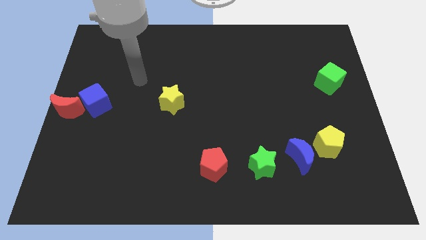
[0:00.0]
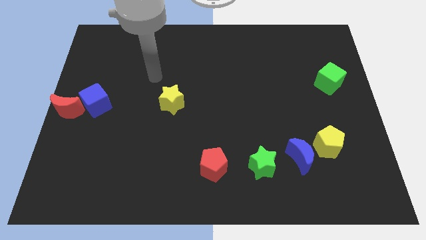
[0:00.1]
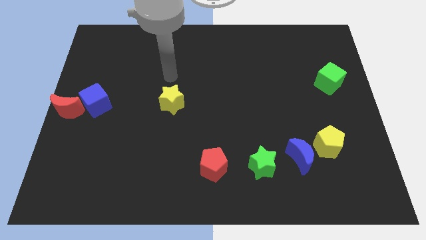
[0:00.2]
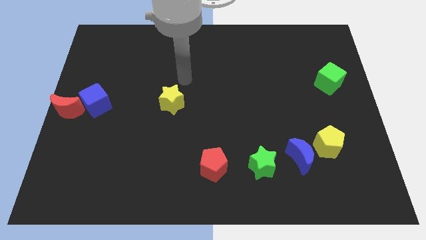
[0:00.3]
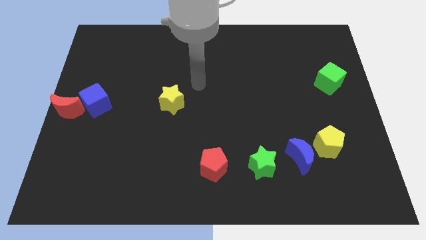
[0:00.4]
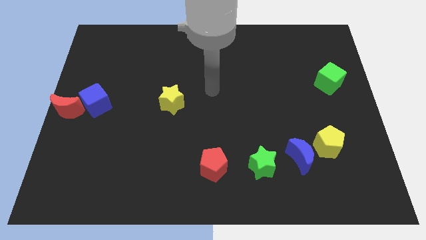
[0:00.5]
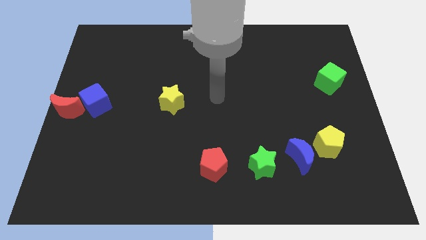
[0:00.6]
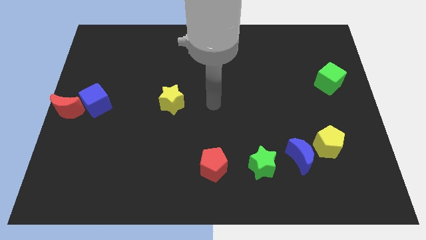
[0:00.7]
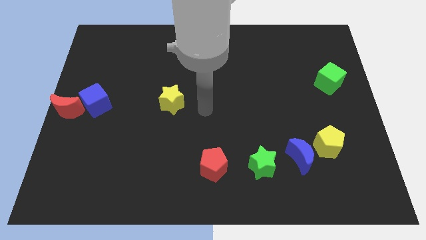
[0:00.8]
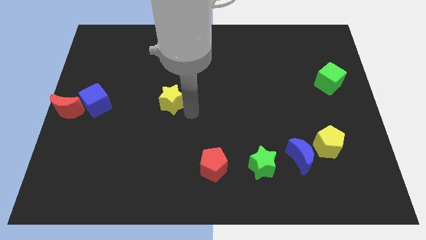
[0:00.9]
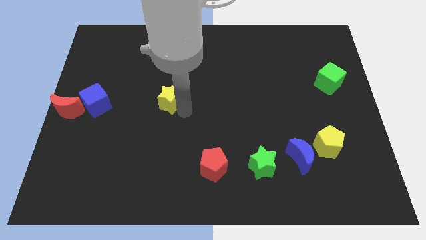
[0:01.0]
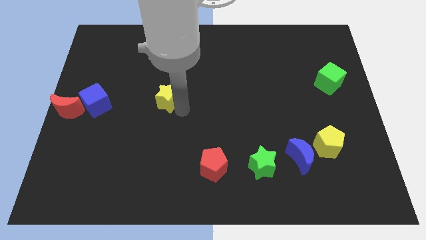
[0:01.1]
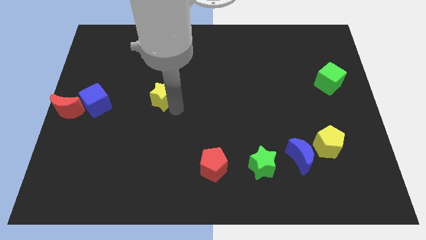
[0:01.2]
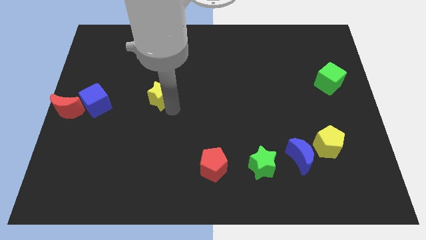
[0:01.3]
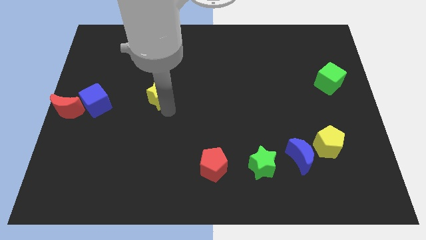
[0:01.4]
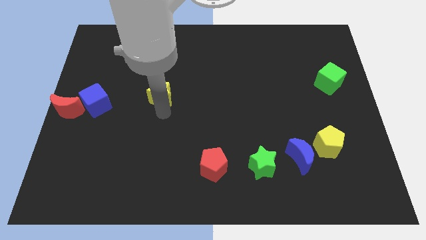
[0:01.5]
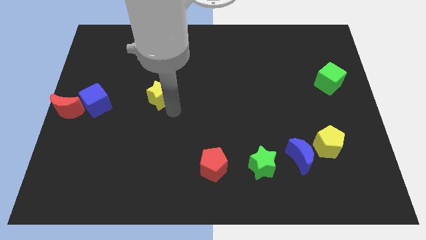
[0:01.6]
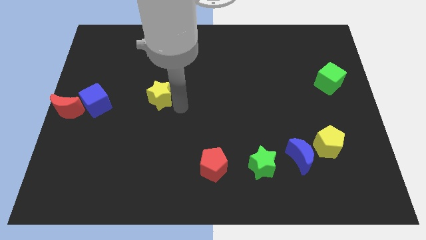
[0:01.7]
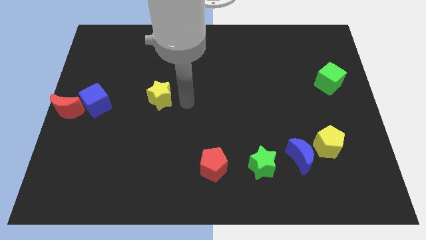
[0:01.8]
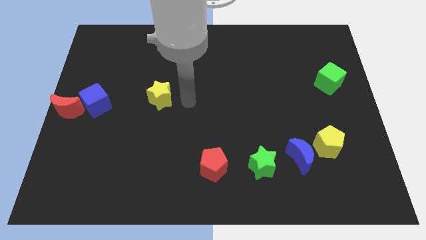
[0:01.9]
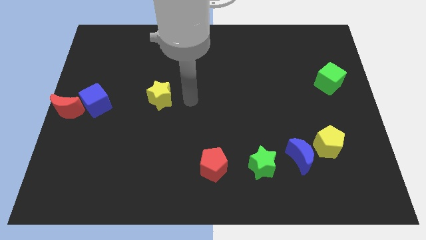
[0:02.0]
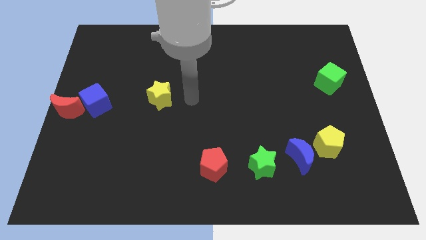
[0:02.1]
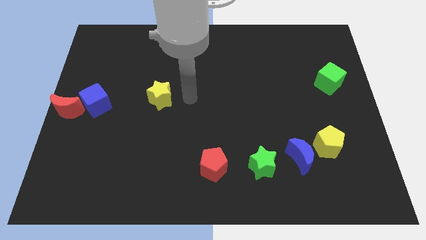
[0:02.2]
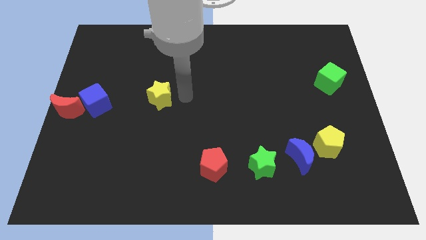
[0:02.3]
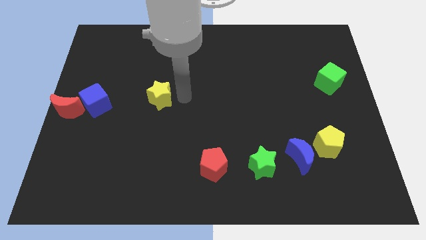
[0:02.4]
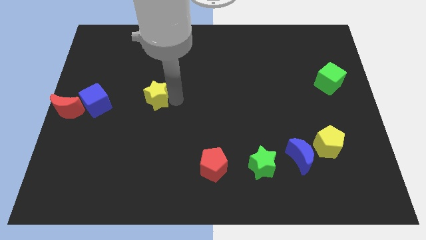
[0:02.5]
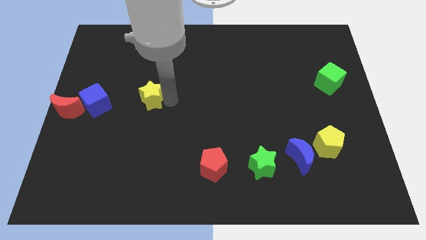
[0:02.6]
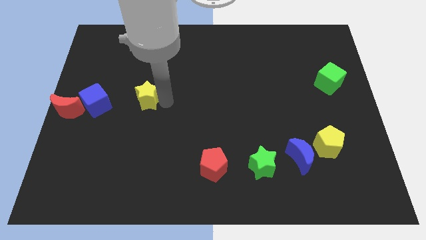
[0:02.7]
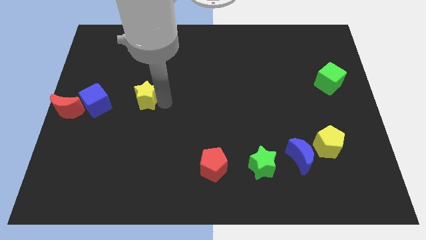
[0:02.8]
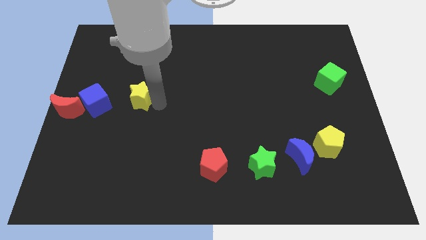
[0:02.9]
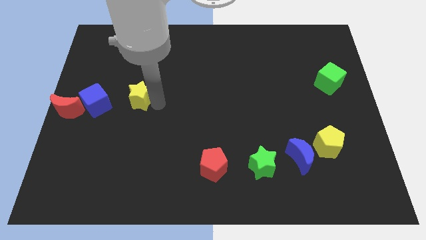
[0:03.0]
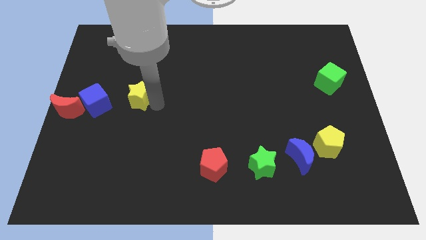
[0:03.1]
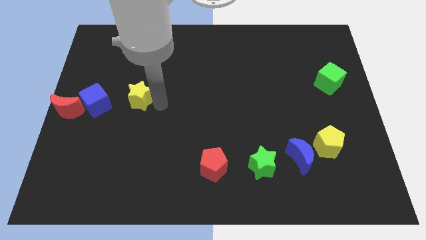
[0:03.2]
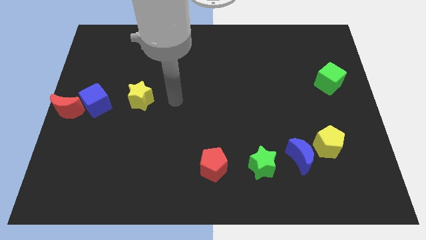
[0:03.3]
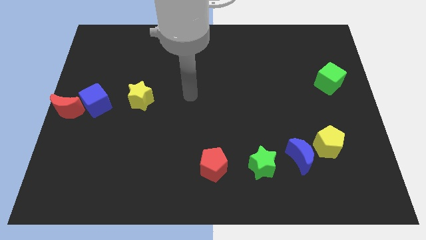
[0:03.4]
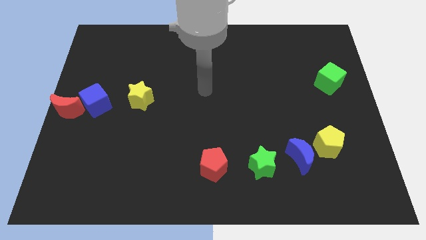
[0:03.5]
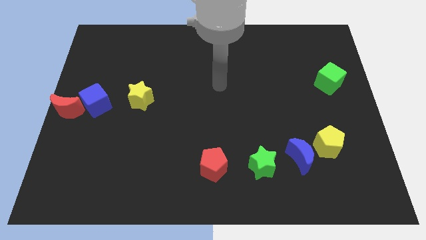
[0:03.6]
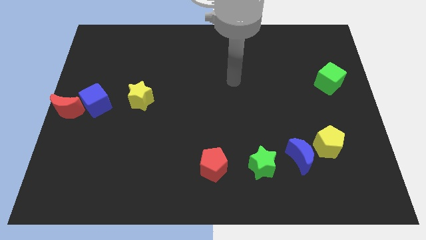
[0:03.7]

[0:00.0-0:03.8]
move the yellow star closer to the blue cube

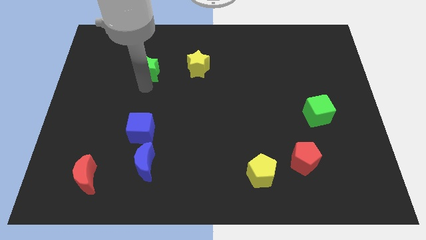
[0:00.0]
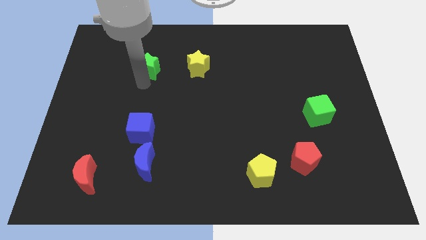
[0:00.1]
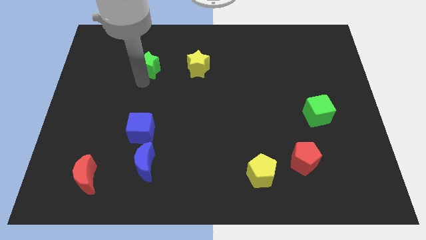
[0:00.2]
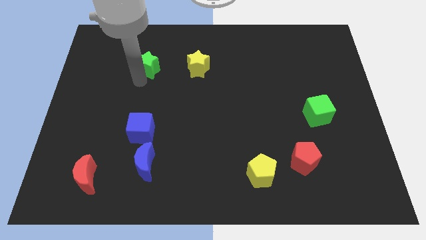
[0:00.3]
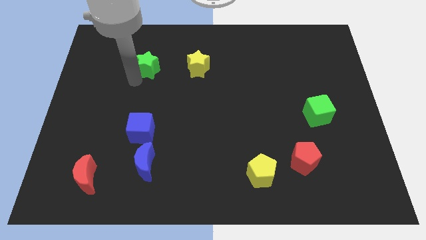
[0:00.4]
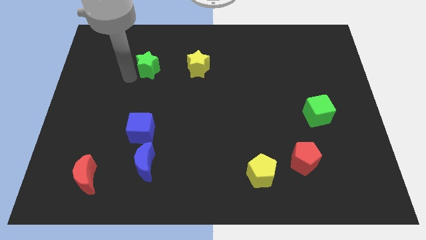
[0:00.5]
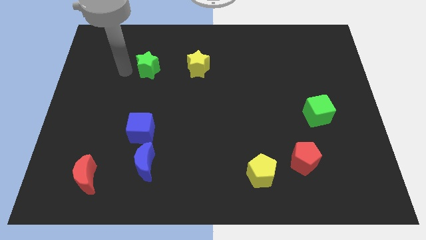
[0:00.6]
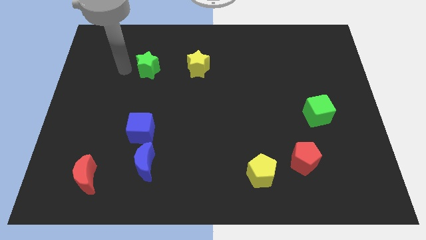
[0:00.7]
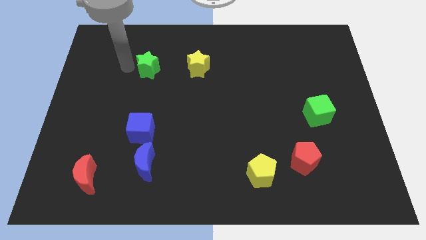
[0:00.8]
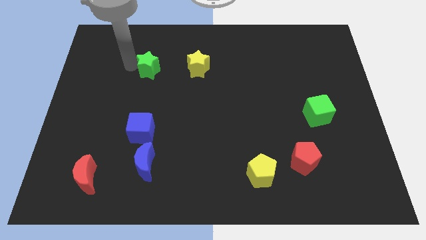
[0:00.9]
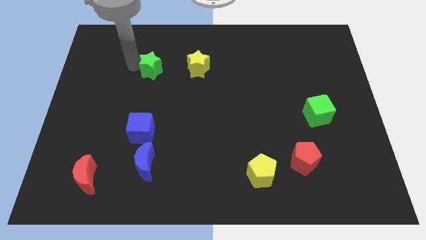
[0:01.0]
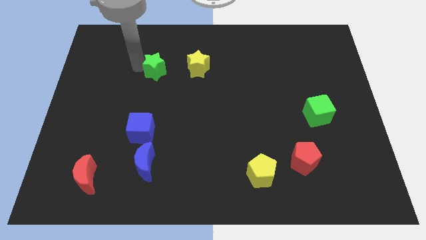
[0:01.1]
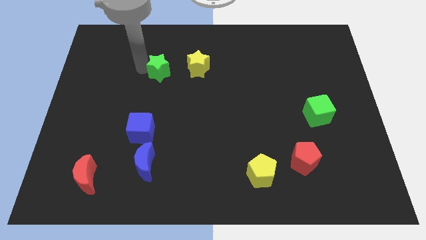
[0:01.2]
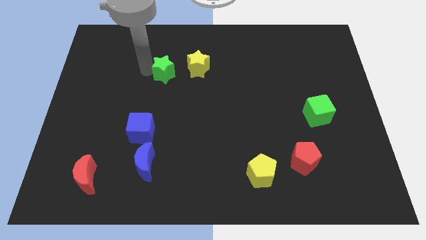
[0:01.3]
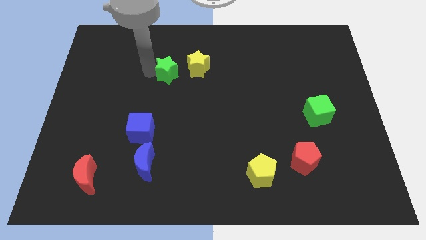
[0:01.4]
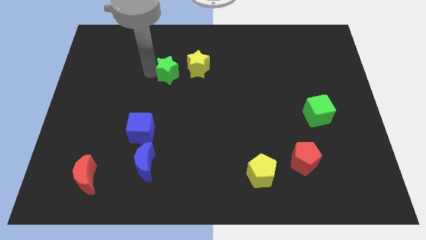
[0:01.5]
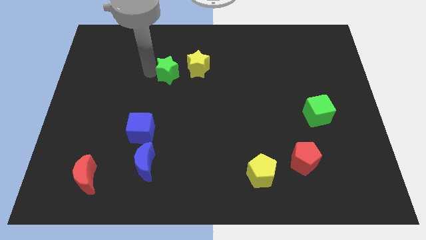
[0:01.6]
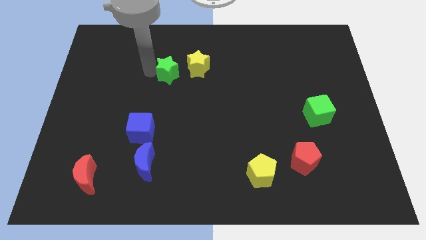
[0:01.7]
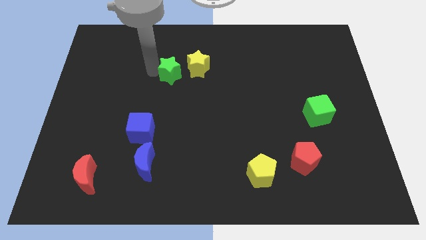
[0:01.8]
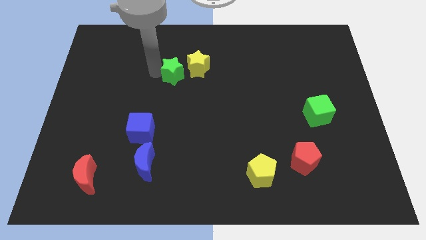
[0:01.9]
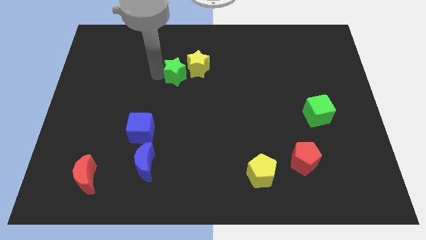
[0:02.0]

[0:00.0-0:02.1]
push green star into yellow star

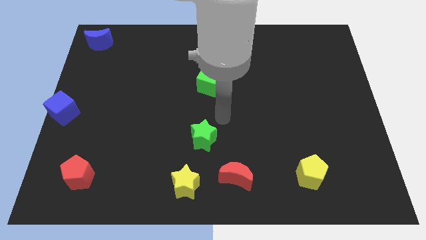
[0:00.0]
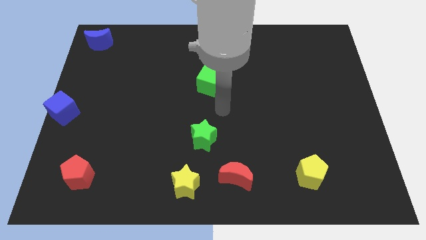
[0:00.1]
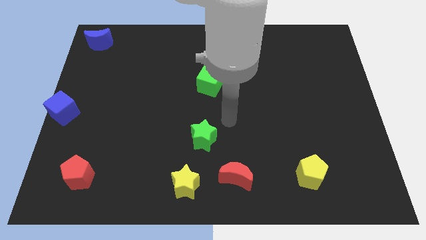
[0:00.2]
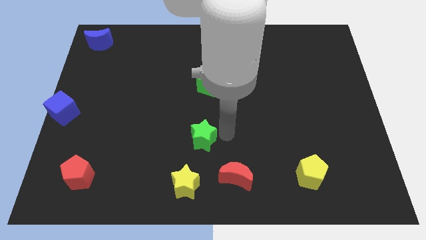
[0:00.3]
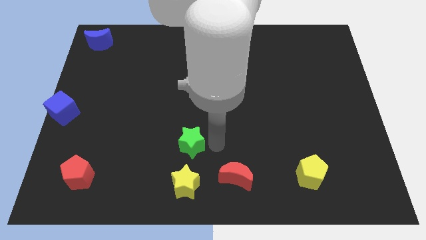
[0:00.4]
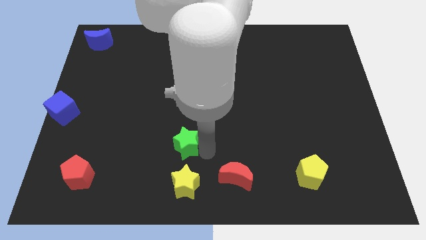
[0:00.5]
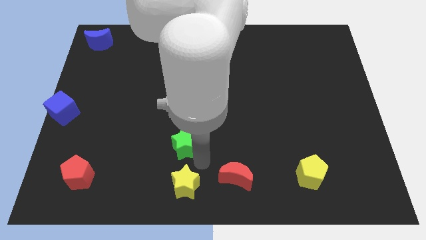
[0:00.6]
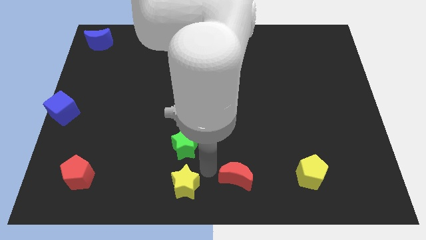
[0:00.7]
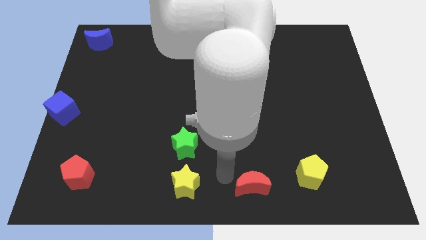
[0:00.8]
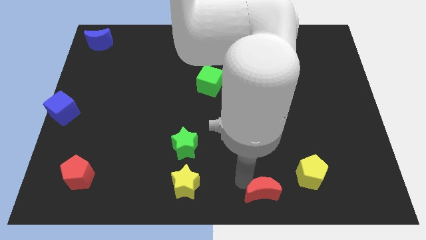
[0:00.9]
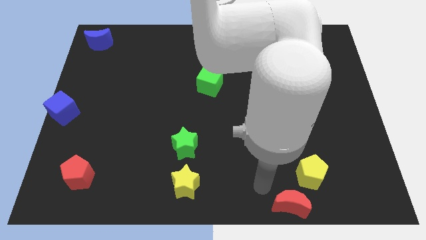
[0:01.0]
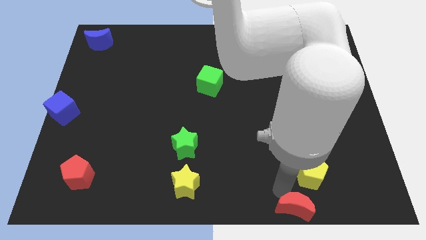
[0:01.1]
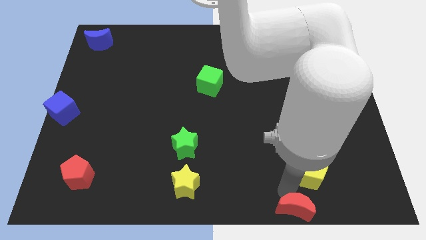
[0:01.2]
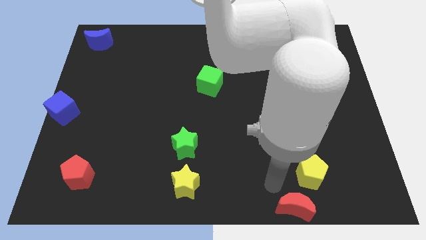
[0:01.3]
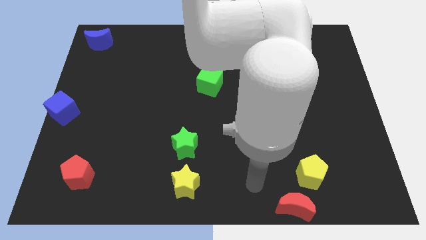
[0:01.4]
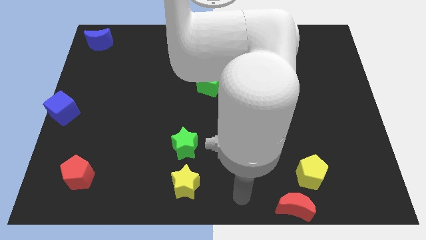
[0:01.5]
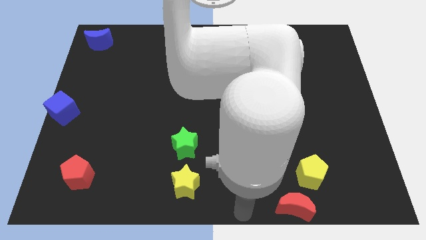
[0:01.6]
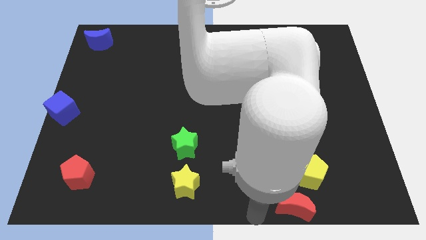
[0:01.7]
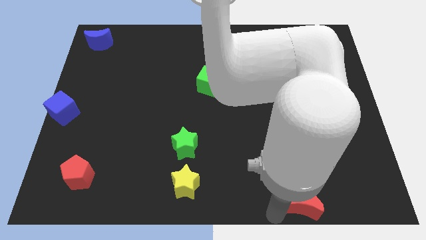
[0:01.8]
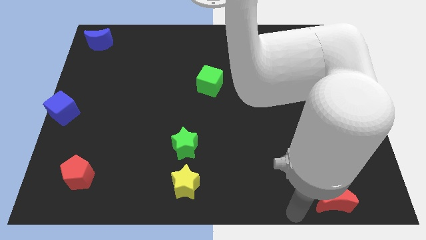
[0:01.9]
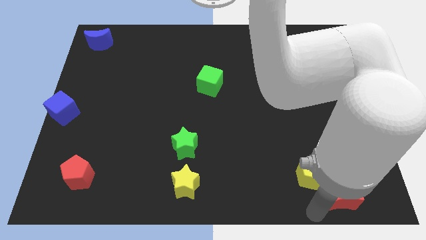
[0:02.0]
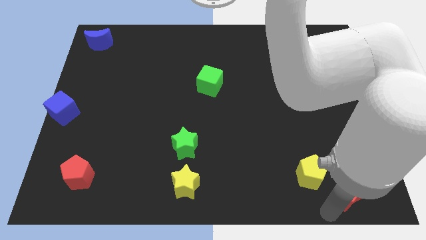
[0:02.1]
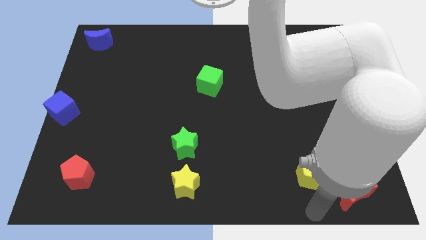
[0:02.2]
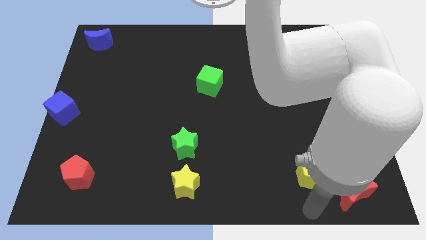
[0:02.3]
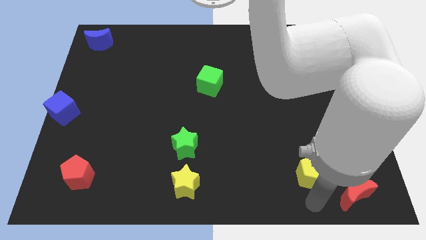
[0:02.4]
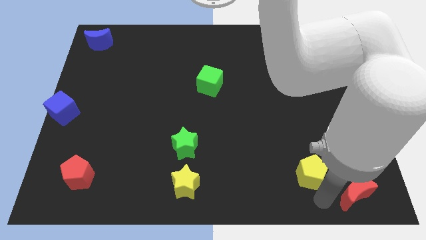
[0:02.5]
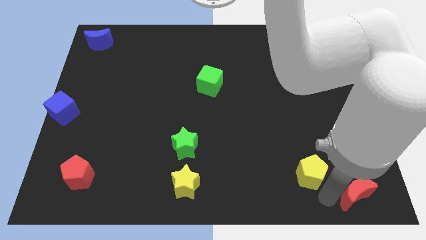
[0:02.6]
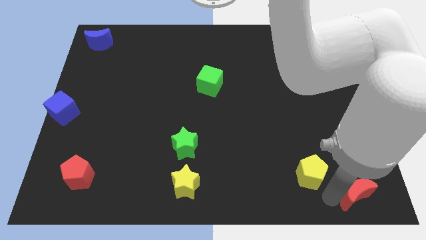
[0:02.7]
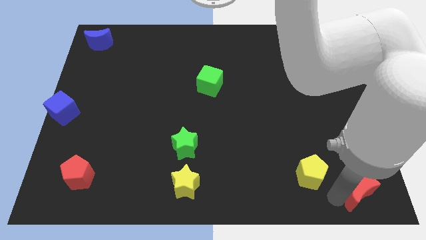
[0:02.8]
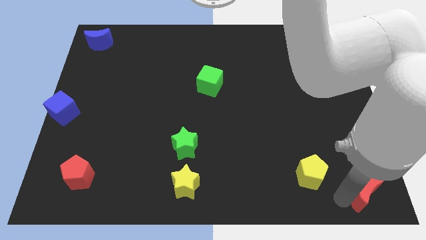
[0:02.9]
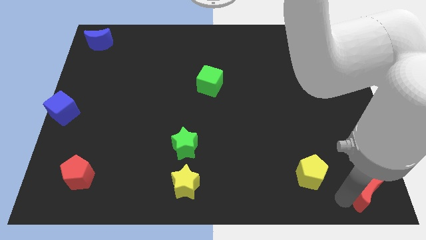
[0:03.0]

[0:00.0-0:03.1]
push red moon towards bottom right
